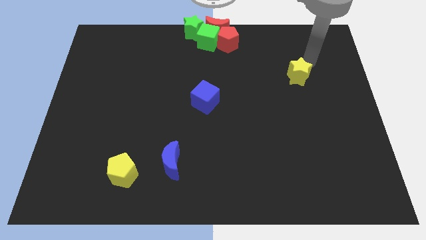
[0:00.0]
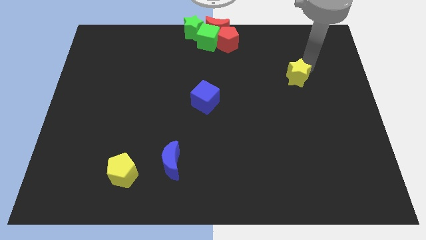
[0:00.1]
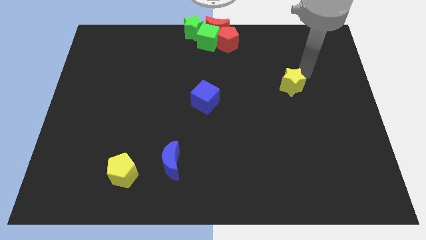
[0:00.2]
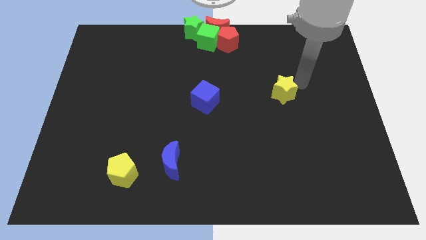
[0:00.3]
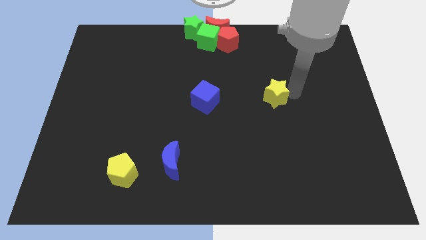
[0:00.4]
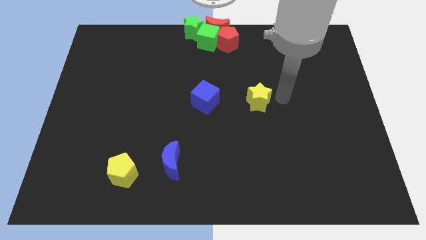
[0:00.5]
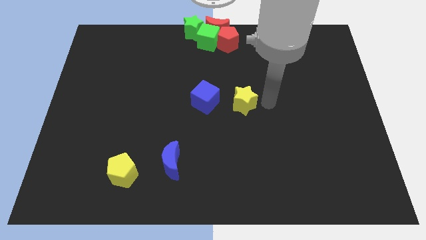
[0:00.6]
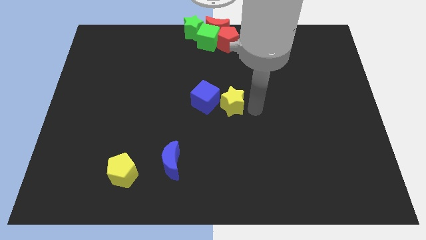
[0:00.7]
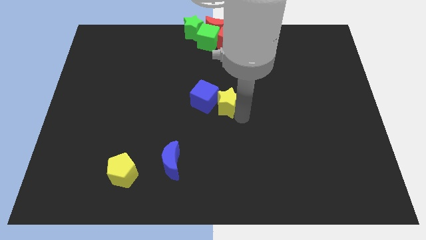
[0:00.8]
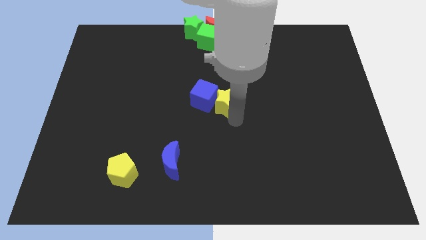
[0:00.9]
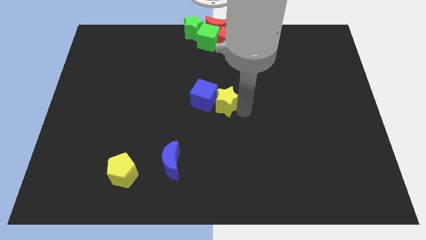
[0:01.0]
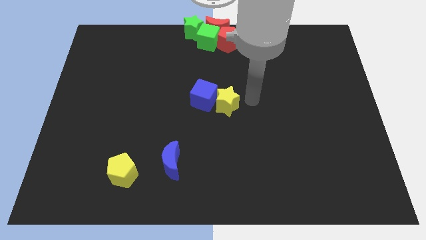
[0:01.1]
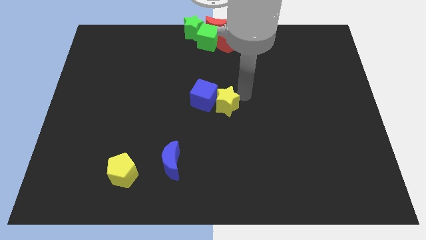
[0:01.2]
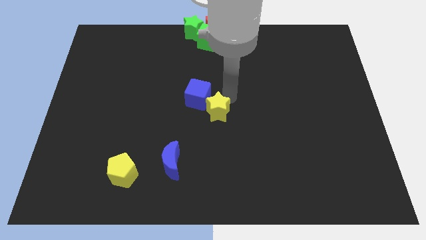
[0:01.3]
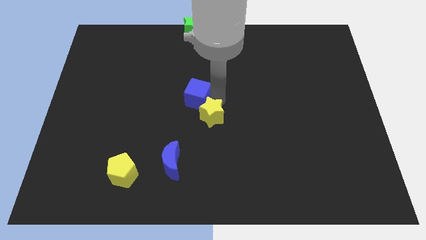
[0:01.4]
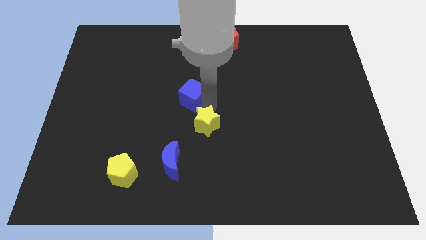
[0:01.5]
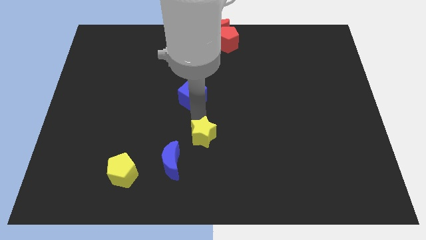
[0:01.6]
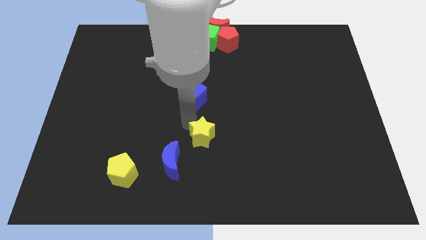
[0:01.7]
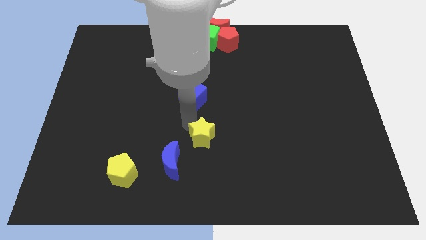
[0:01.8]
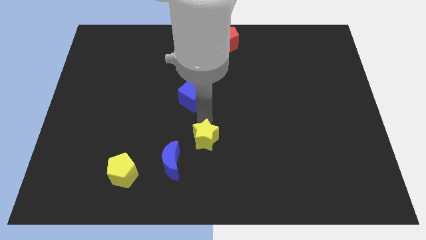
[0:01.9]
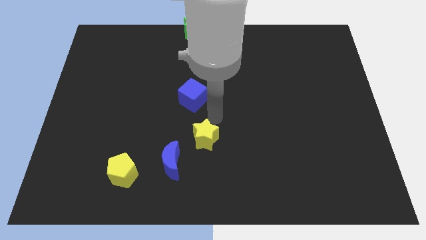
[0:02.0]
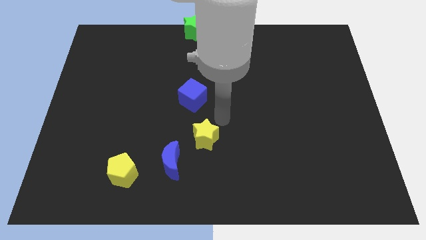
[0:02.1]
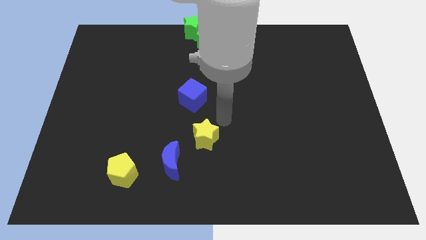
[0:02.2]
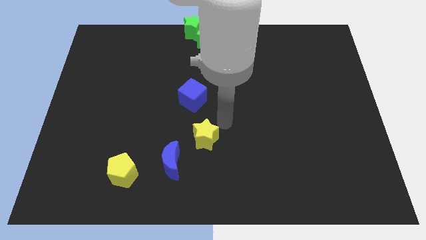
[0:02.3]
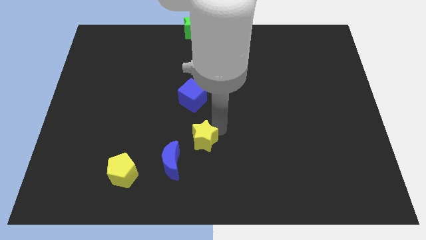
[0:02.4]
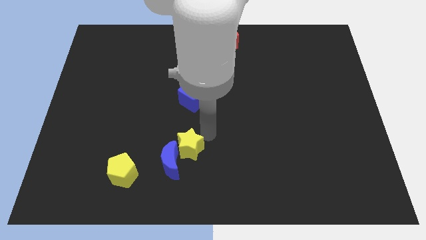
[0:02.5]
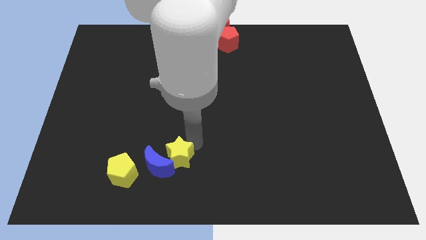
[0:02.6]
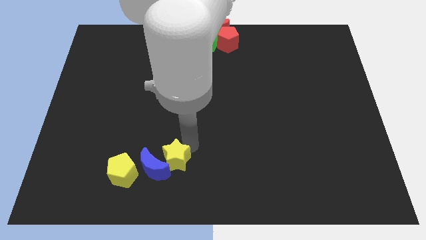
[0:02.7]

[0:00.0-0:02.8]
move yellow star into the blue moon

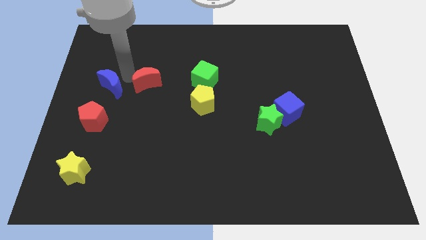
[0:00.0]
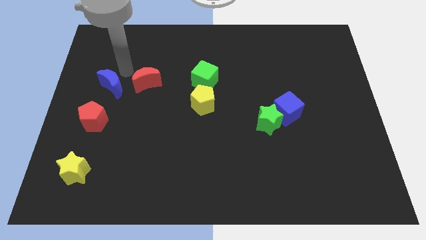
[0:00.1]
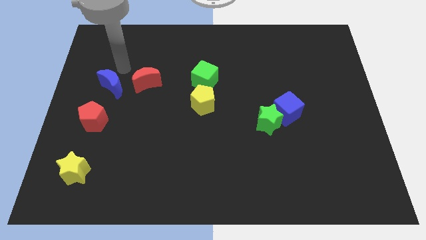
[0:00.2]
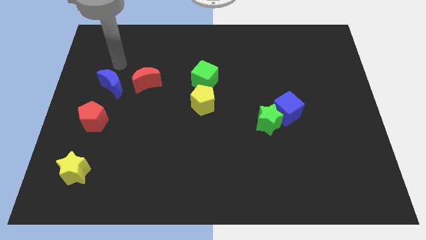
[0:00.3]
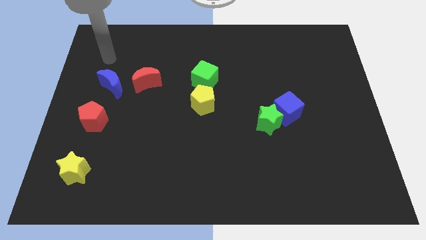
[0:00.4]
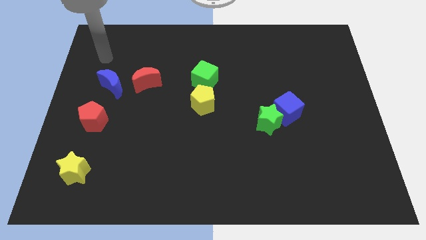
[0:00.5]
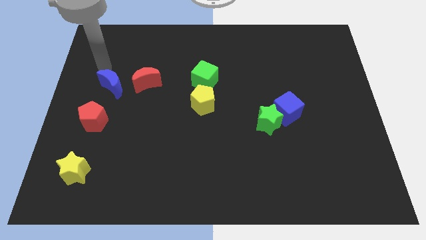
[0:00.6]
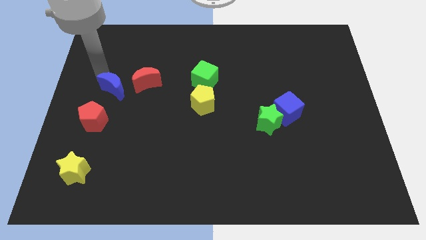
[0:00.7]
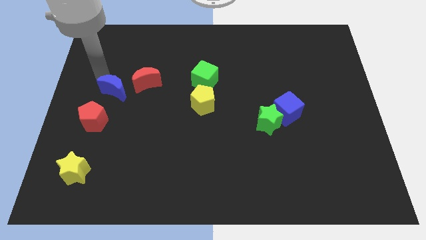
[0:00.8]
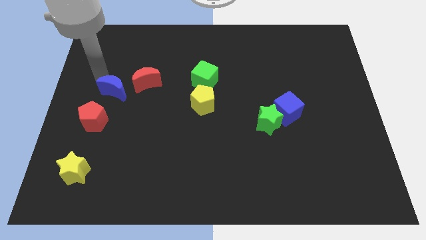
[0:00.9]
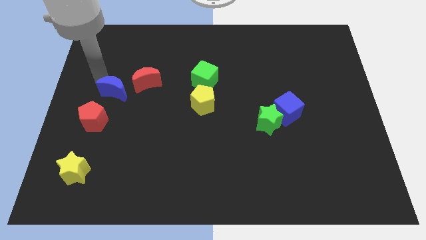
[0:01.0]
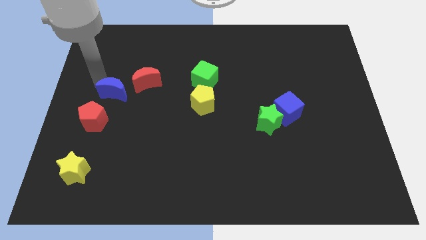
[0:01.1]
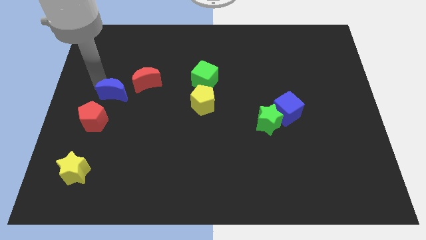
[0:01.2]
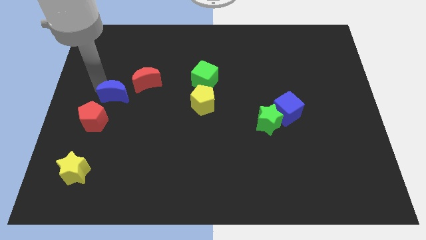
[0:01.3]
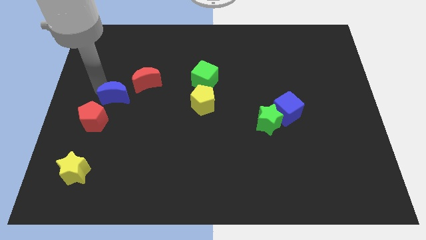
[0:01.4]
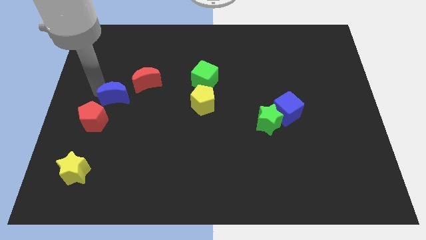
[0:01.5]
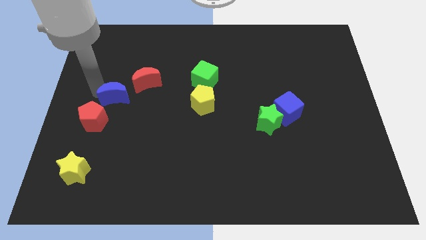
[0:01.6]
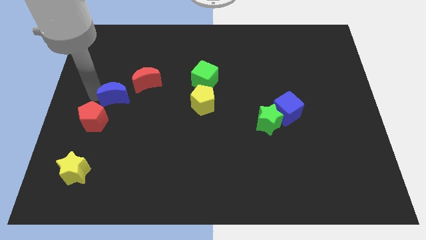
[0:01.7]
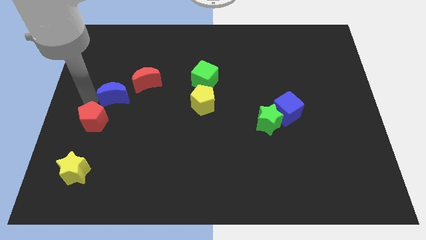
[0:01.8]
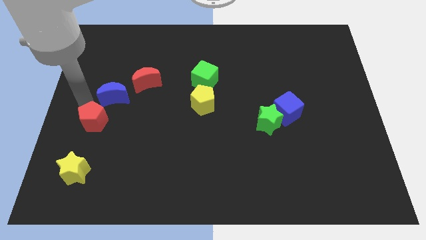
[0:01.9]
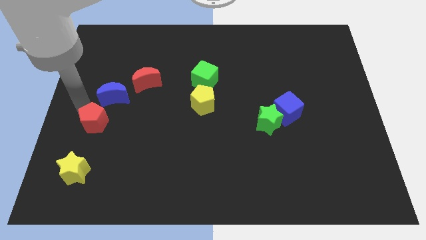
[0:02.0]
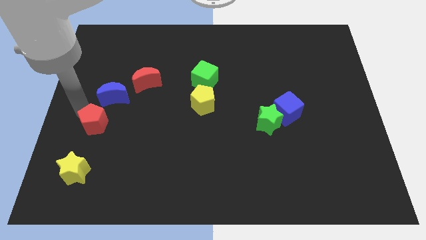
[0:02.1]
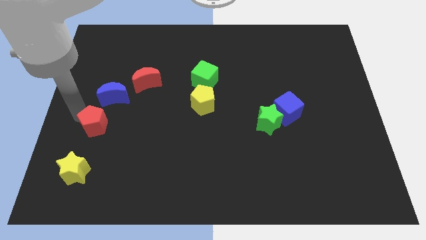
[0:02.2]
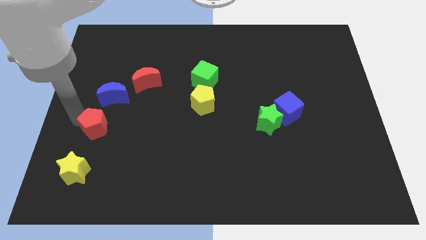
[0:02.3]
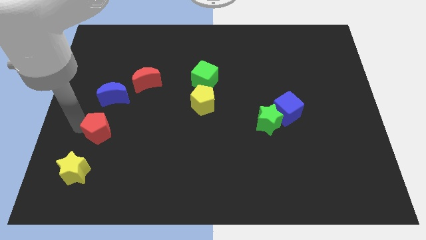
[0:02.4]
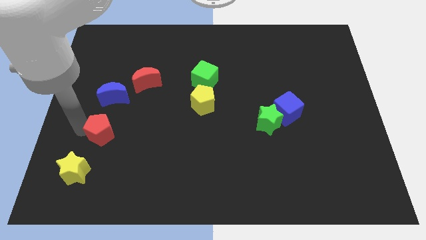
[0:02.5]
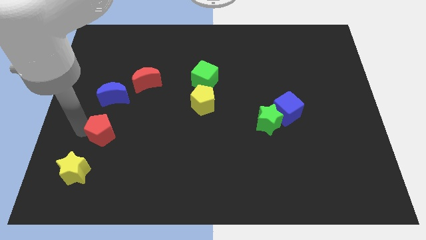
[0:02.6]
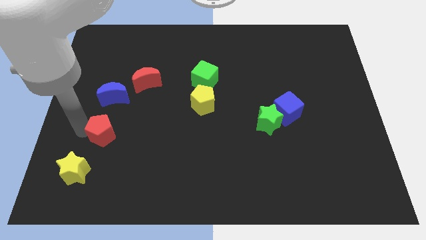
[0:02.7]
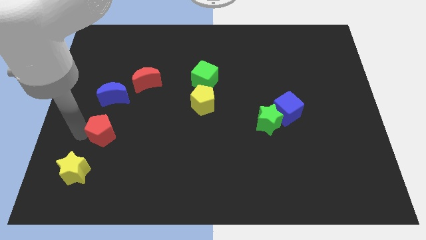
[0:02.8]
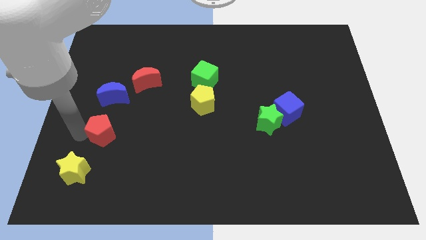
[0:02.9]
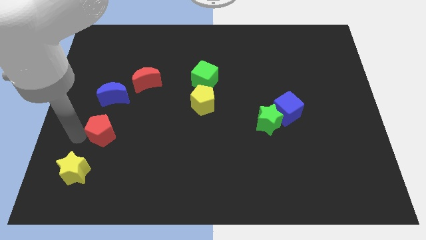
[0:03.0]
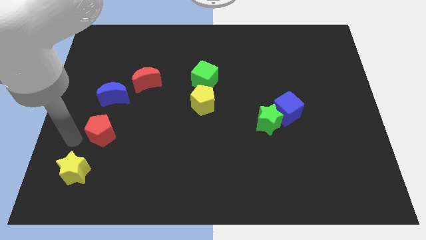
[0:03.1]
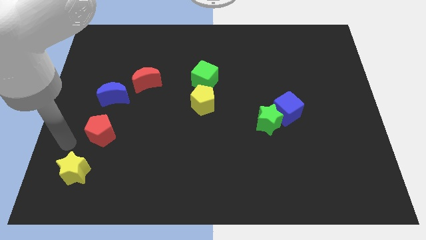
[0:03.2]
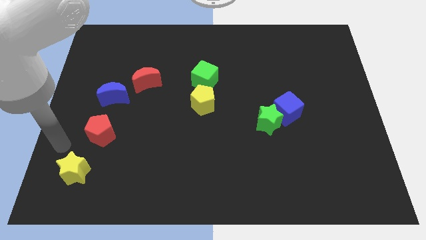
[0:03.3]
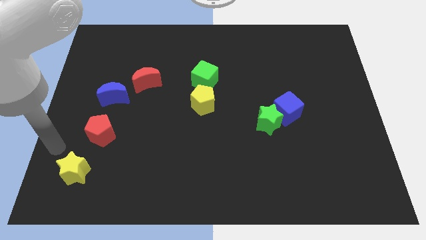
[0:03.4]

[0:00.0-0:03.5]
push blue crescent and red pentagon towards bottom

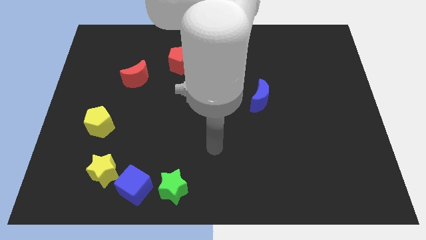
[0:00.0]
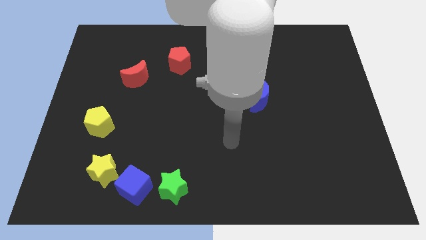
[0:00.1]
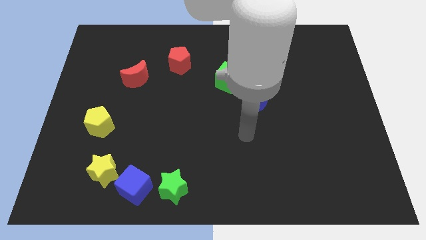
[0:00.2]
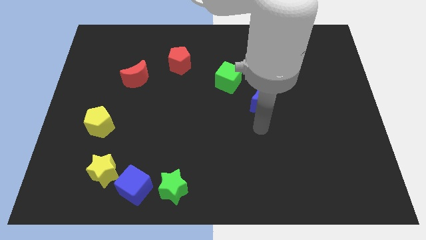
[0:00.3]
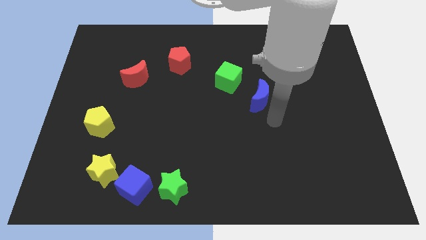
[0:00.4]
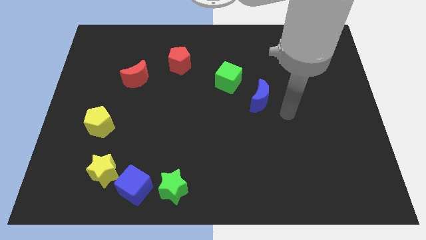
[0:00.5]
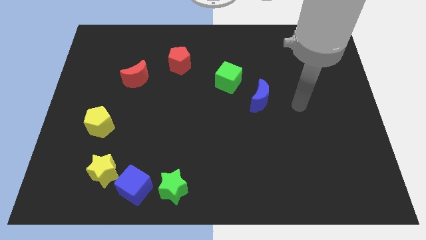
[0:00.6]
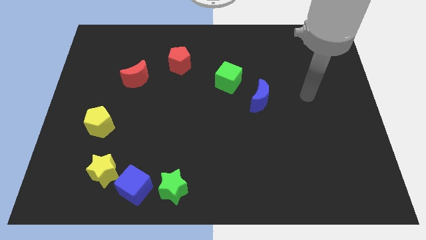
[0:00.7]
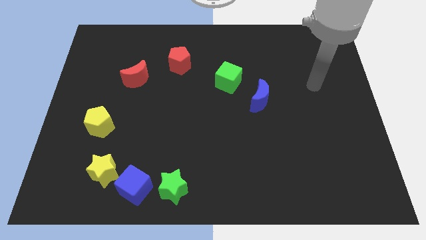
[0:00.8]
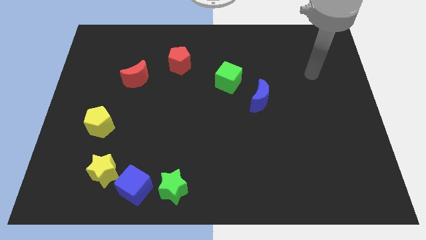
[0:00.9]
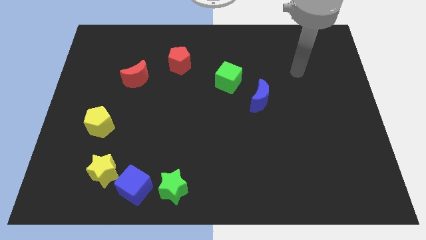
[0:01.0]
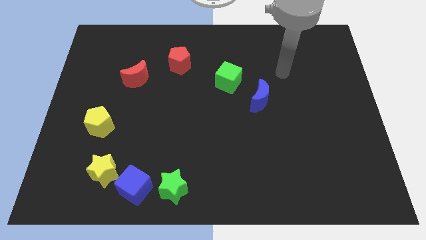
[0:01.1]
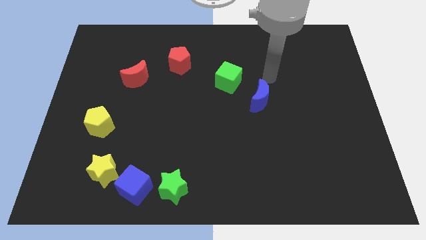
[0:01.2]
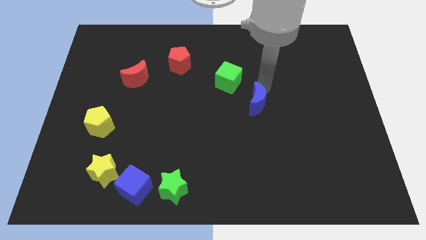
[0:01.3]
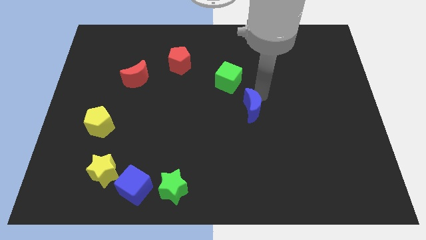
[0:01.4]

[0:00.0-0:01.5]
move your arm to the top of the blue crescent

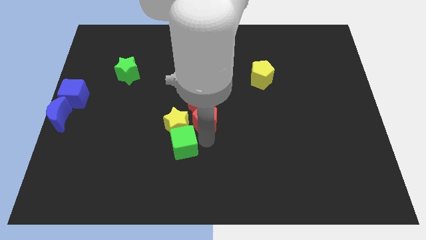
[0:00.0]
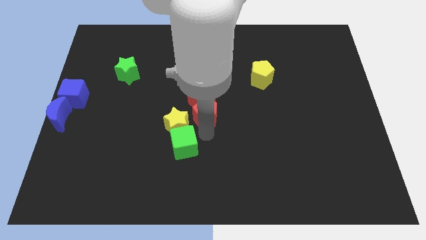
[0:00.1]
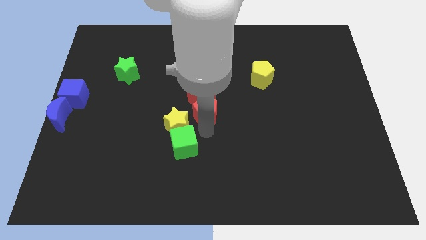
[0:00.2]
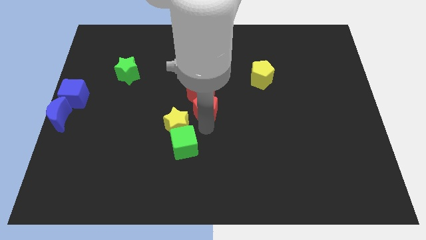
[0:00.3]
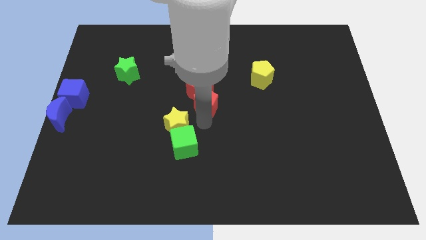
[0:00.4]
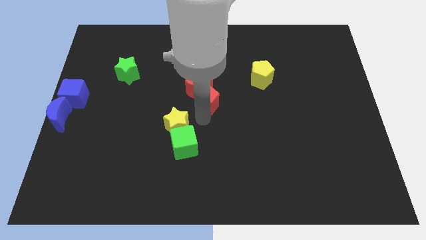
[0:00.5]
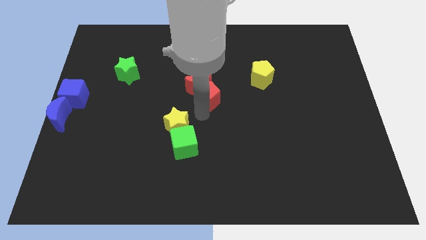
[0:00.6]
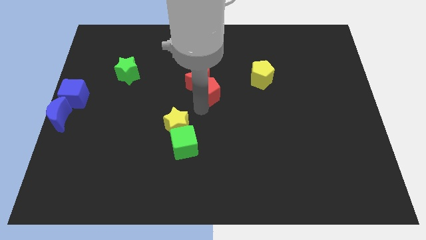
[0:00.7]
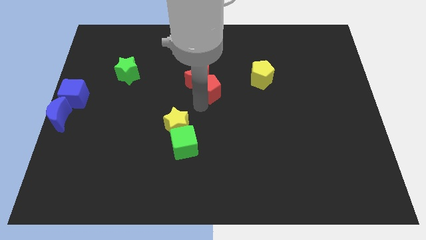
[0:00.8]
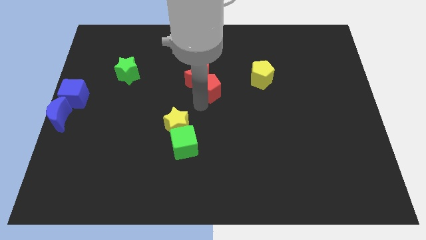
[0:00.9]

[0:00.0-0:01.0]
push the red blocks slightly to the top

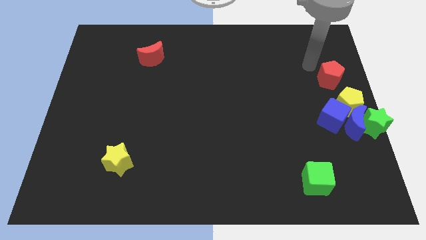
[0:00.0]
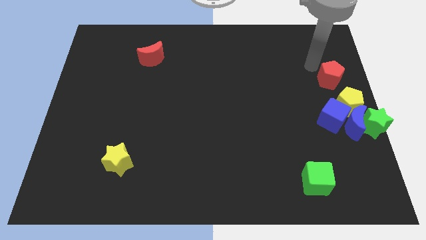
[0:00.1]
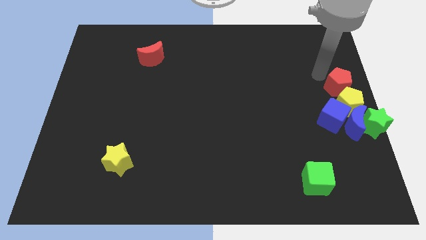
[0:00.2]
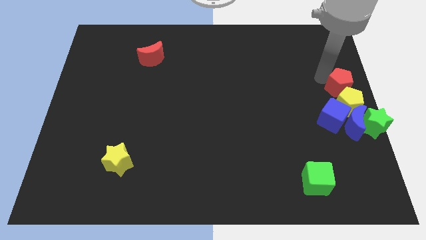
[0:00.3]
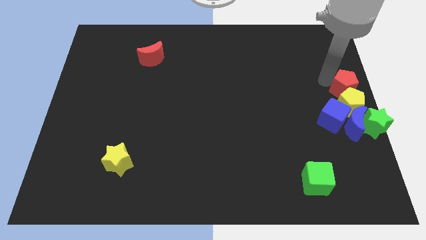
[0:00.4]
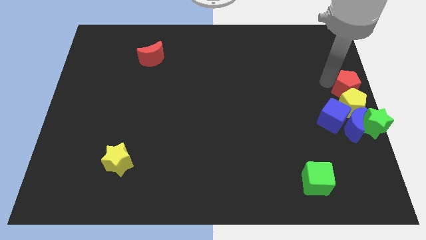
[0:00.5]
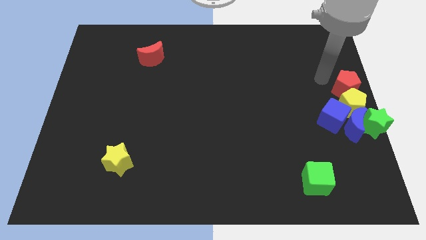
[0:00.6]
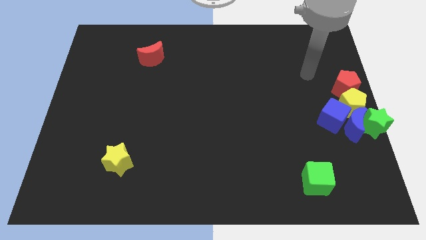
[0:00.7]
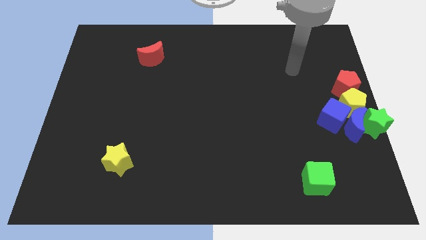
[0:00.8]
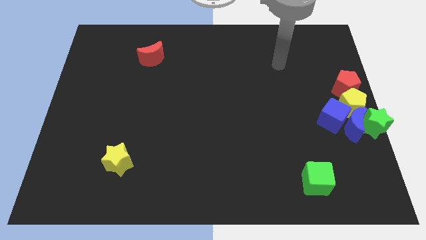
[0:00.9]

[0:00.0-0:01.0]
push the red pentagon into the top side of the yellow pentagon
